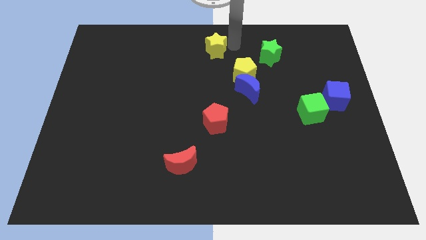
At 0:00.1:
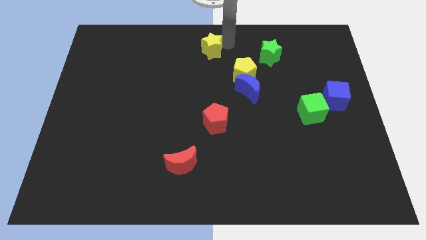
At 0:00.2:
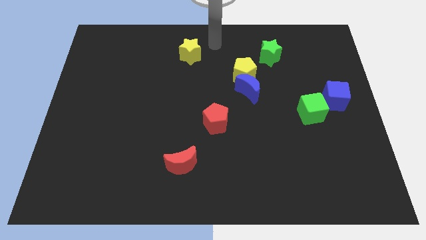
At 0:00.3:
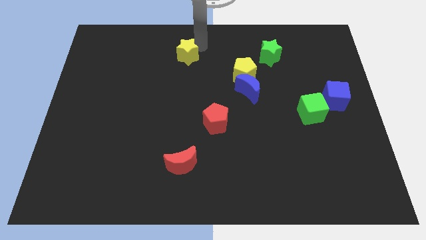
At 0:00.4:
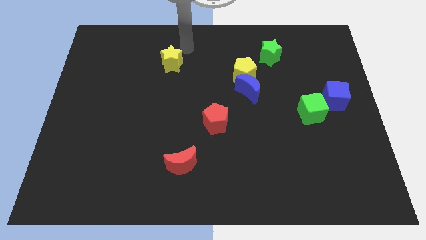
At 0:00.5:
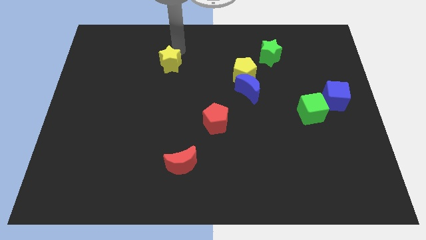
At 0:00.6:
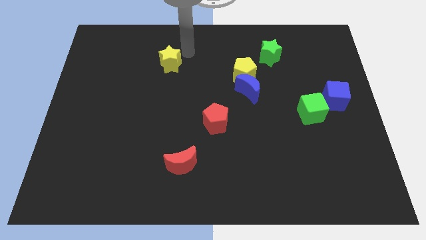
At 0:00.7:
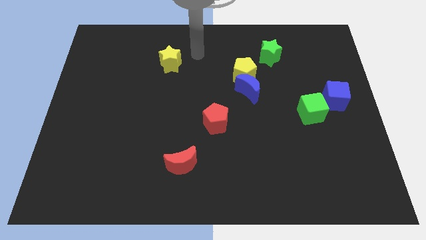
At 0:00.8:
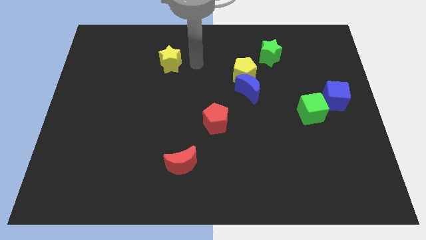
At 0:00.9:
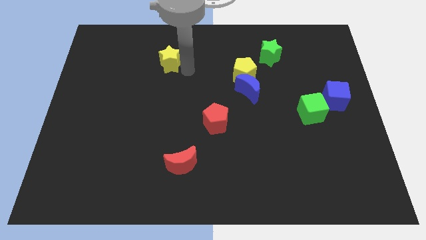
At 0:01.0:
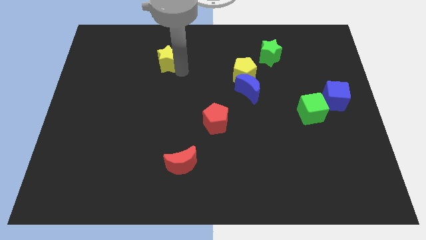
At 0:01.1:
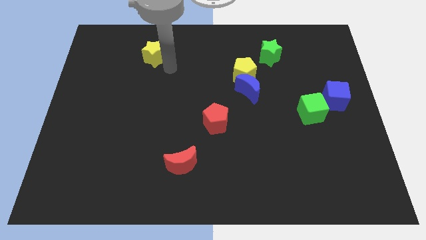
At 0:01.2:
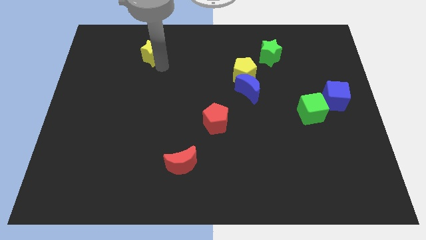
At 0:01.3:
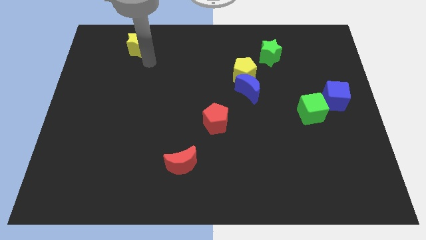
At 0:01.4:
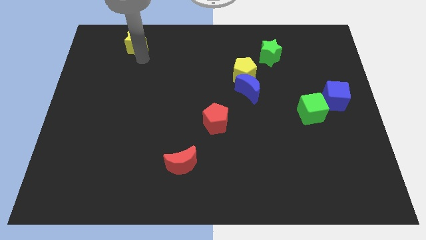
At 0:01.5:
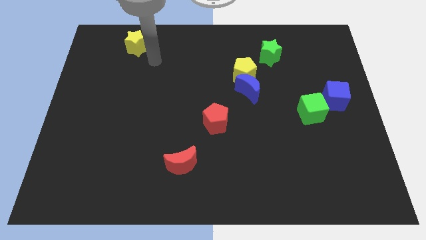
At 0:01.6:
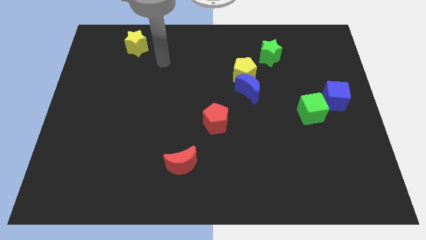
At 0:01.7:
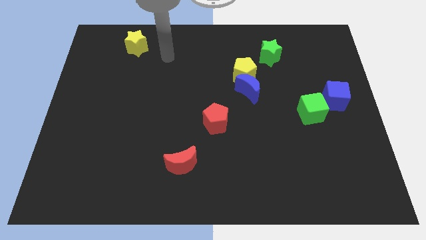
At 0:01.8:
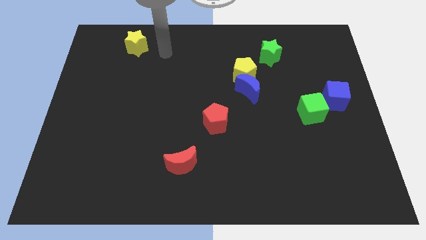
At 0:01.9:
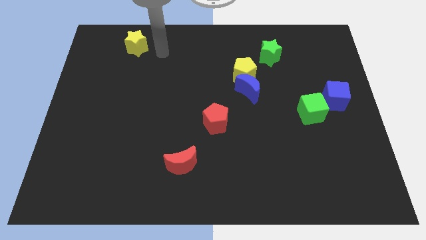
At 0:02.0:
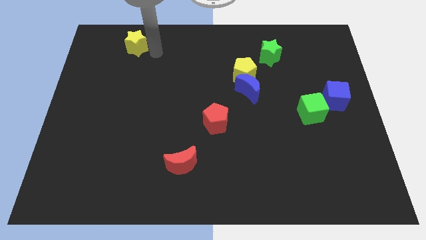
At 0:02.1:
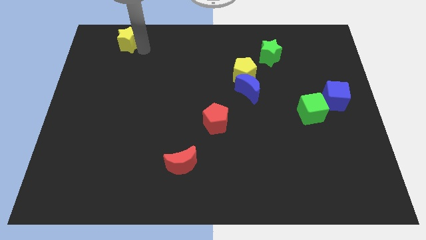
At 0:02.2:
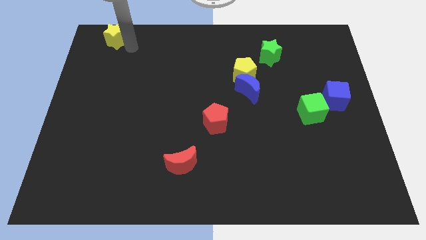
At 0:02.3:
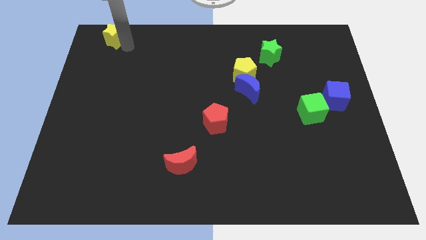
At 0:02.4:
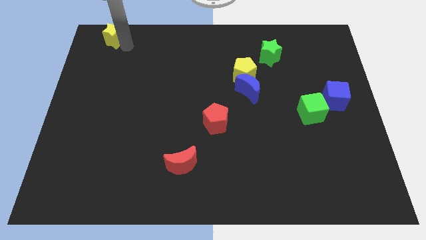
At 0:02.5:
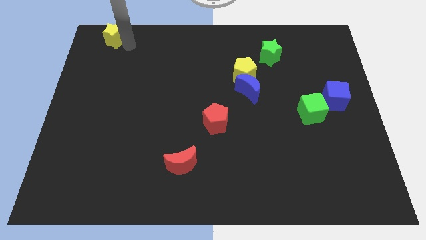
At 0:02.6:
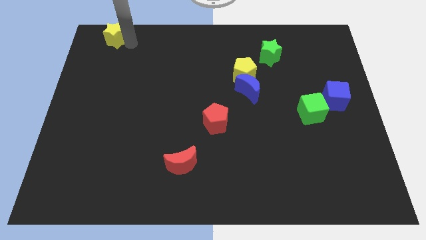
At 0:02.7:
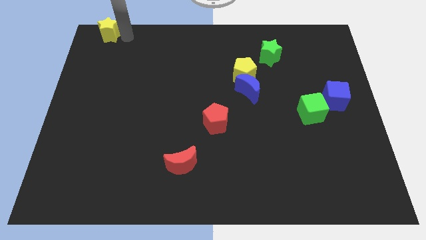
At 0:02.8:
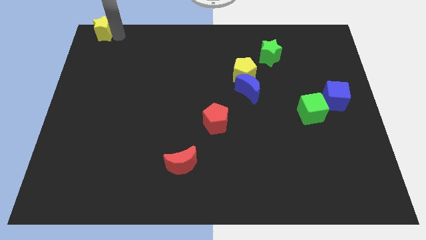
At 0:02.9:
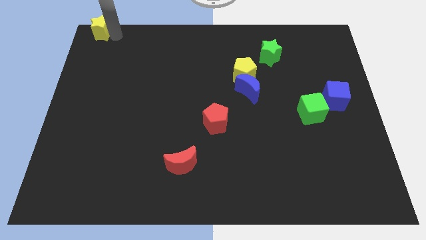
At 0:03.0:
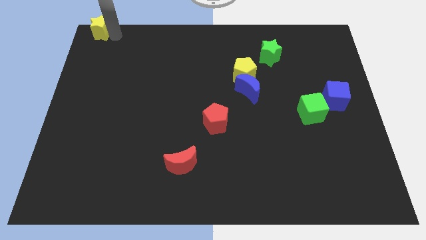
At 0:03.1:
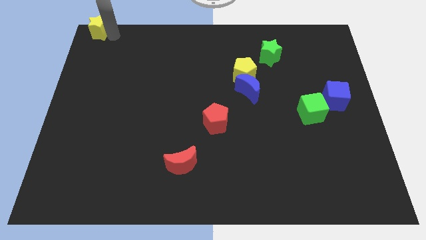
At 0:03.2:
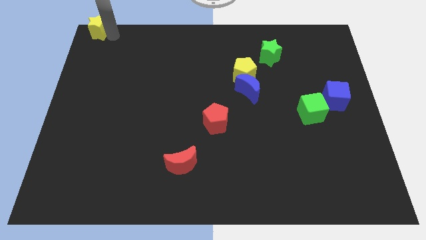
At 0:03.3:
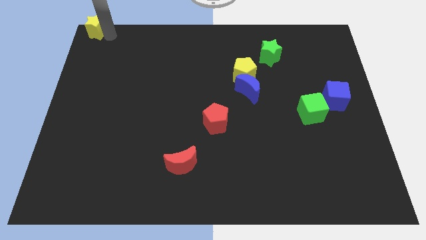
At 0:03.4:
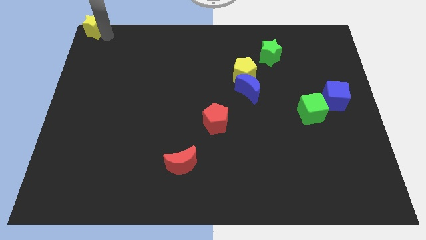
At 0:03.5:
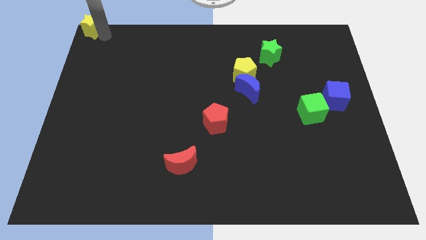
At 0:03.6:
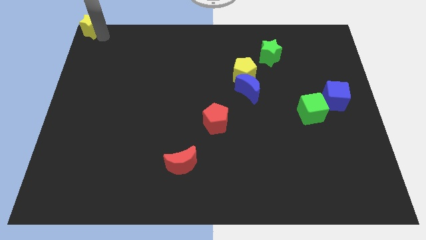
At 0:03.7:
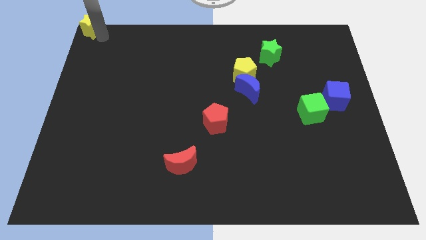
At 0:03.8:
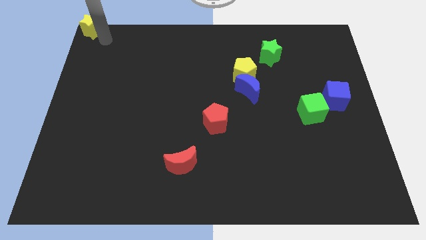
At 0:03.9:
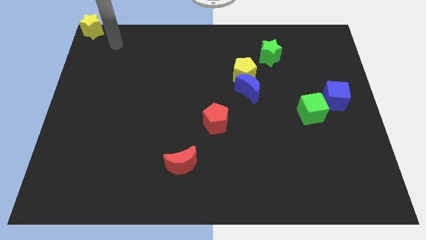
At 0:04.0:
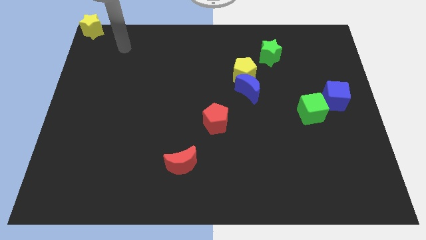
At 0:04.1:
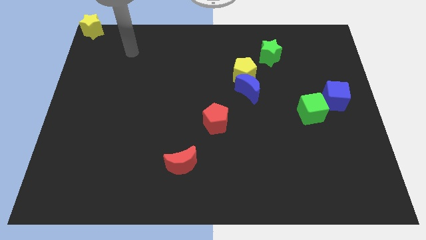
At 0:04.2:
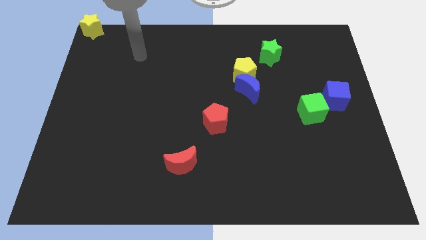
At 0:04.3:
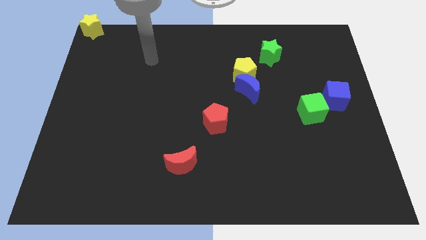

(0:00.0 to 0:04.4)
move the yellow star to the top left corner

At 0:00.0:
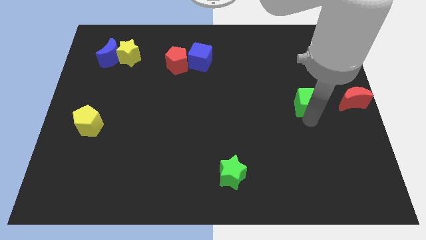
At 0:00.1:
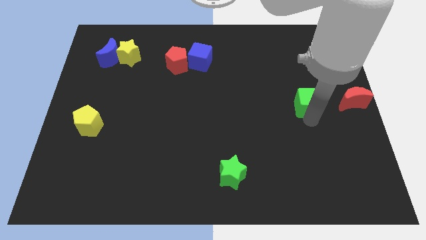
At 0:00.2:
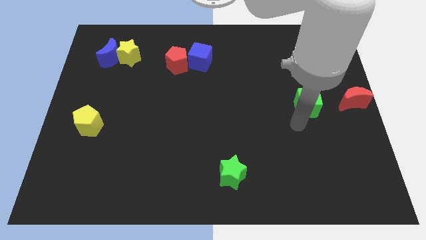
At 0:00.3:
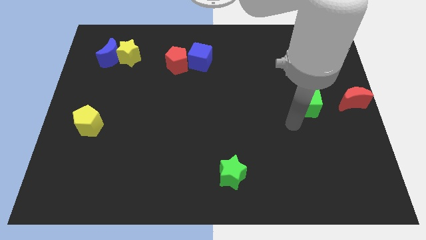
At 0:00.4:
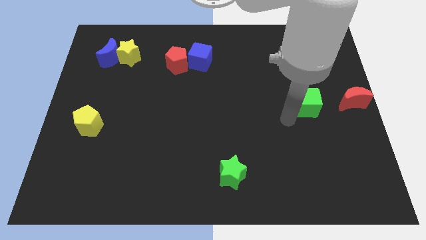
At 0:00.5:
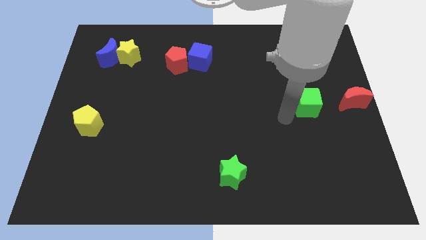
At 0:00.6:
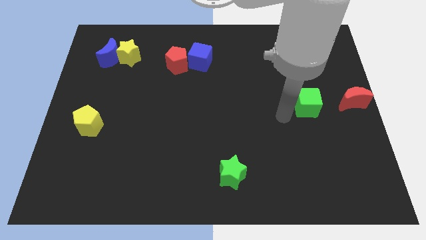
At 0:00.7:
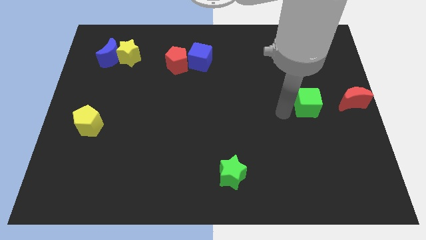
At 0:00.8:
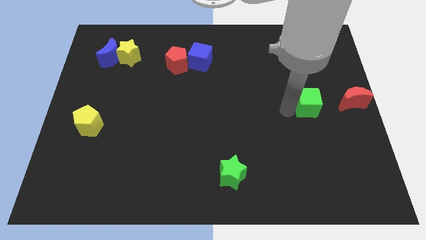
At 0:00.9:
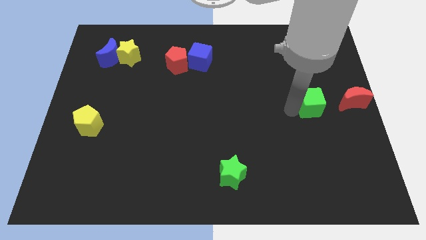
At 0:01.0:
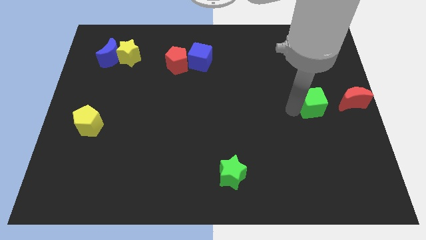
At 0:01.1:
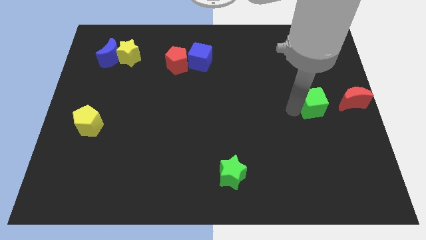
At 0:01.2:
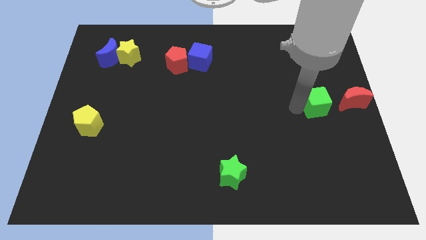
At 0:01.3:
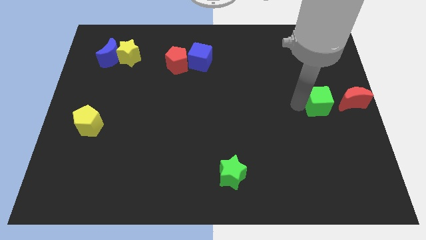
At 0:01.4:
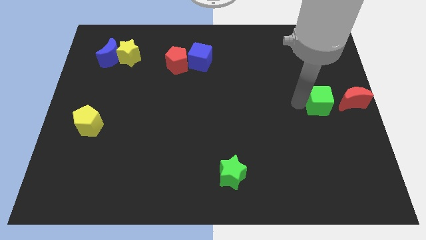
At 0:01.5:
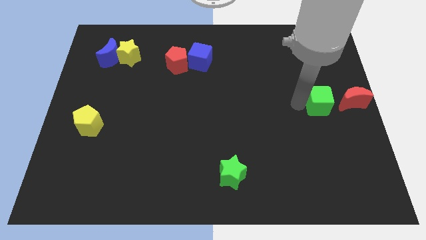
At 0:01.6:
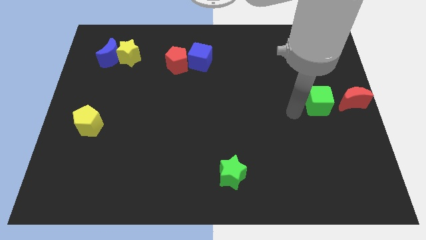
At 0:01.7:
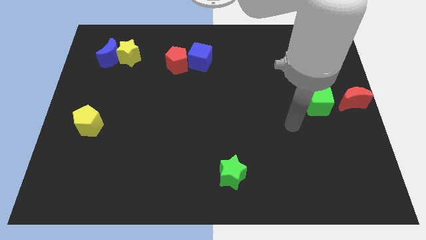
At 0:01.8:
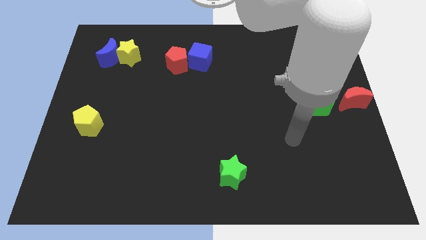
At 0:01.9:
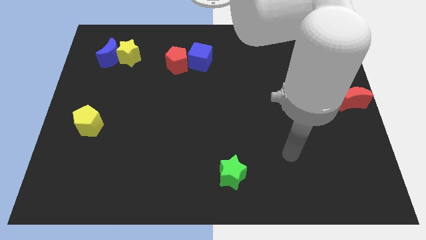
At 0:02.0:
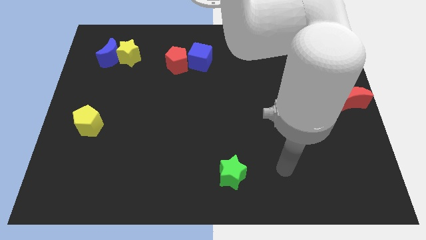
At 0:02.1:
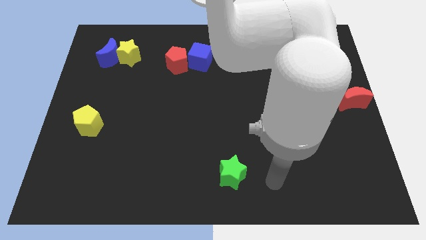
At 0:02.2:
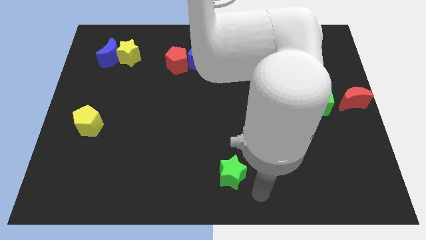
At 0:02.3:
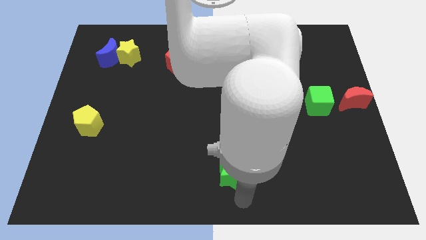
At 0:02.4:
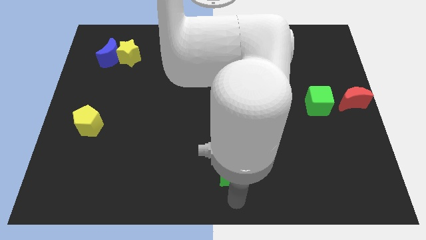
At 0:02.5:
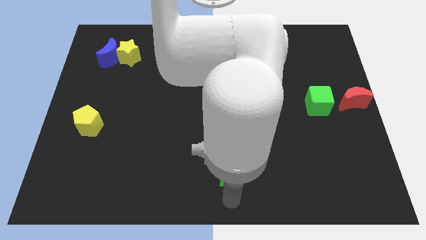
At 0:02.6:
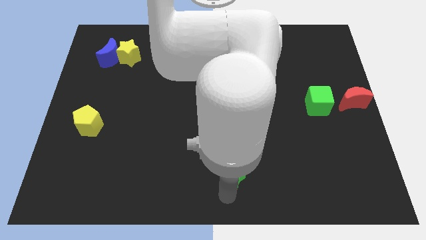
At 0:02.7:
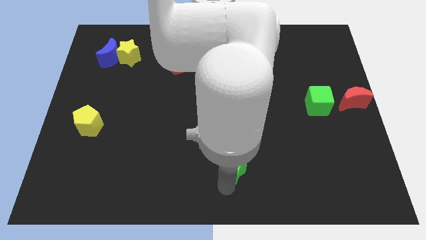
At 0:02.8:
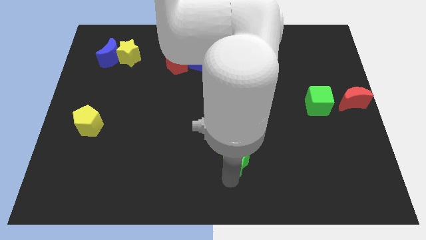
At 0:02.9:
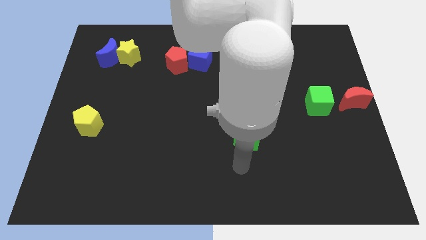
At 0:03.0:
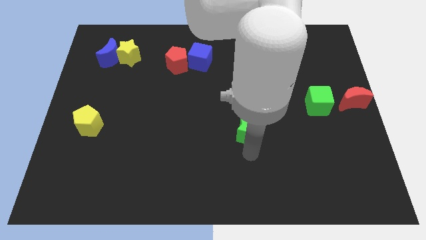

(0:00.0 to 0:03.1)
slightly push the green star upwards

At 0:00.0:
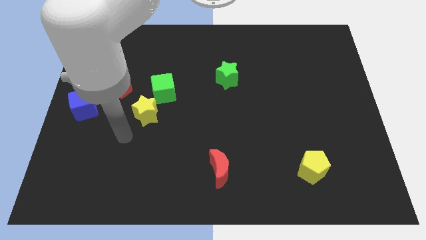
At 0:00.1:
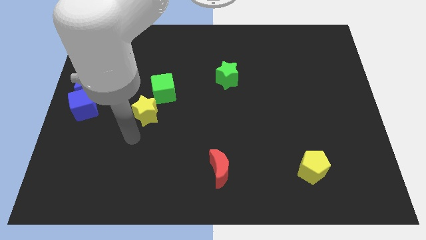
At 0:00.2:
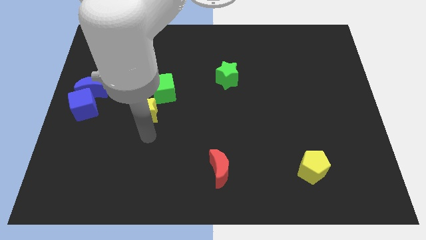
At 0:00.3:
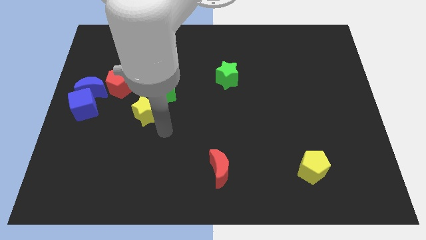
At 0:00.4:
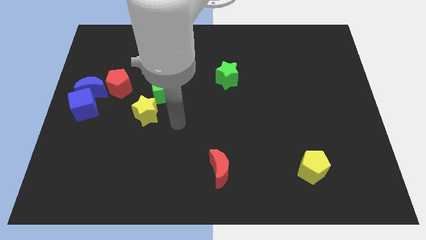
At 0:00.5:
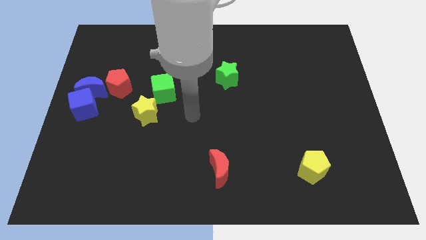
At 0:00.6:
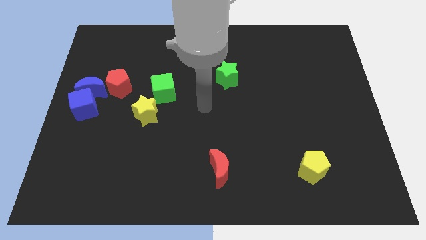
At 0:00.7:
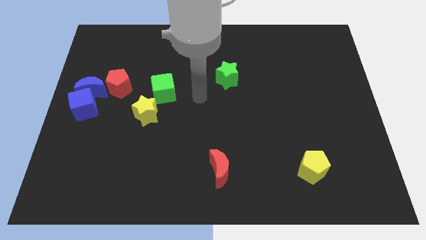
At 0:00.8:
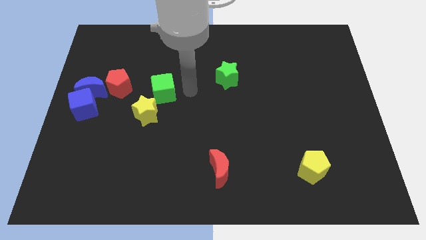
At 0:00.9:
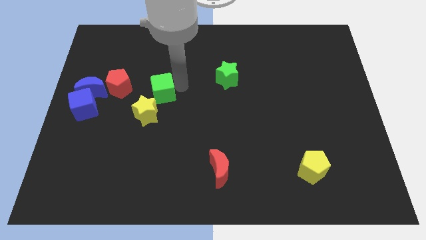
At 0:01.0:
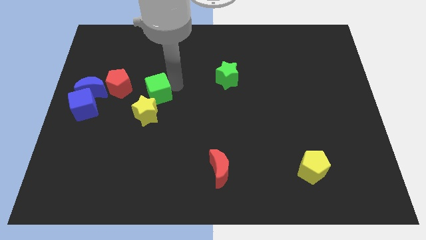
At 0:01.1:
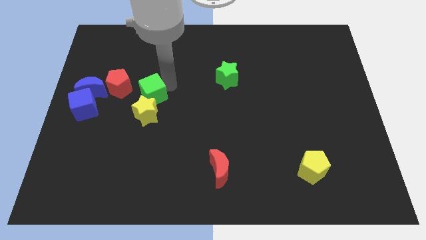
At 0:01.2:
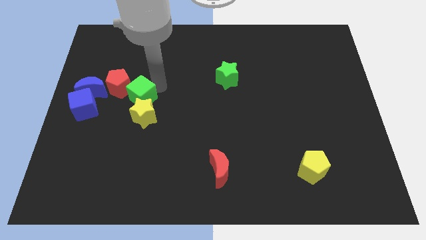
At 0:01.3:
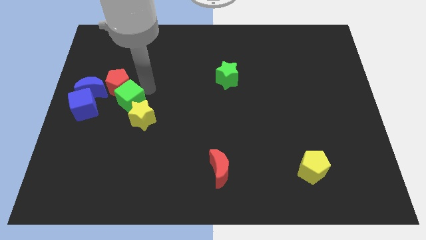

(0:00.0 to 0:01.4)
point your arm right to green cube

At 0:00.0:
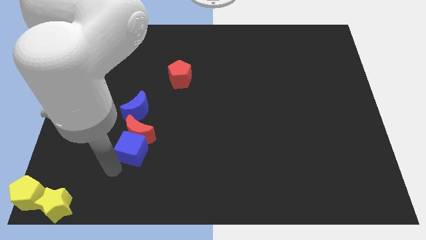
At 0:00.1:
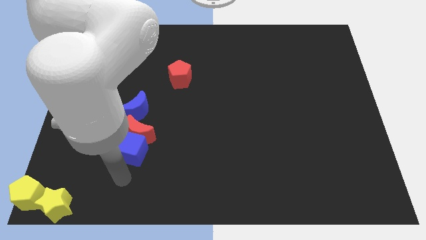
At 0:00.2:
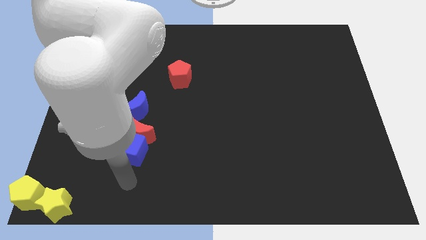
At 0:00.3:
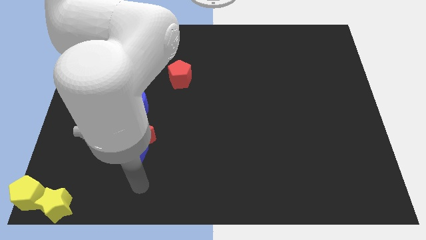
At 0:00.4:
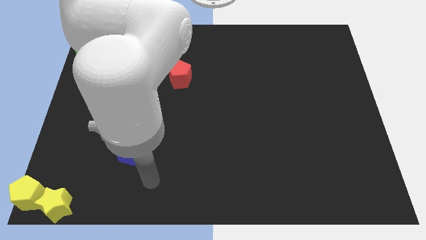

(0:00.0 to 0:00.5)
move the blue cube slightly towards left
